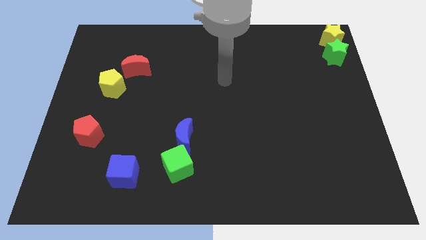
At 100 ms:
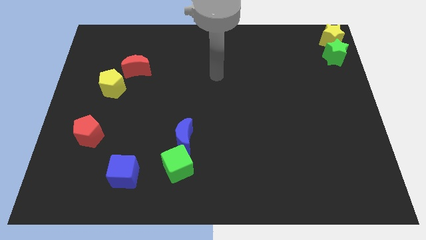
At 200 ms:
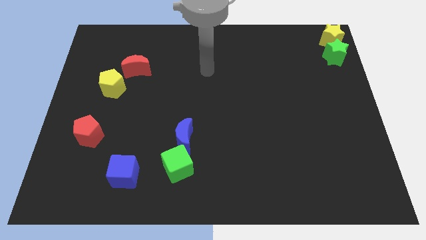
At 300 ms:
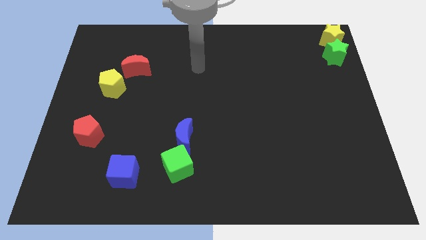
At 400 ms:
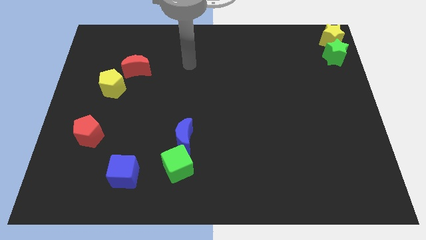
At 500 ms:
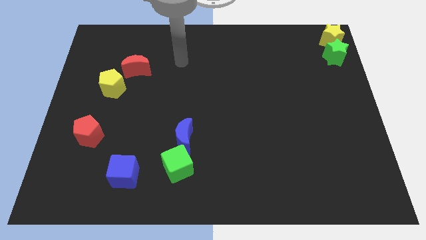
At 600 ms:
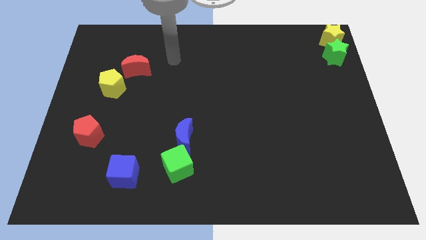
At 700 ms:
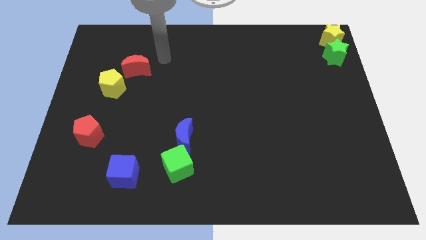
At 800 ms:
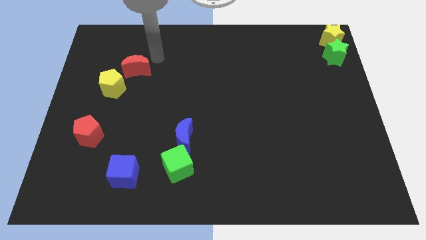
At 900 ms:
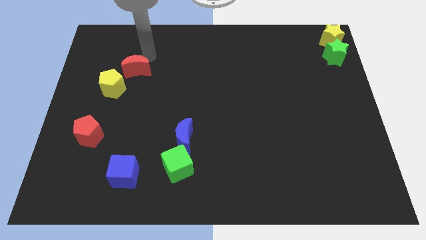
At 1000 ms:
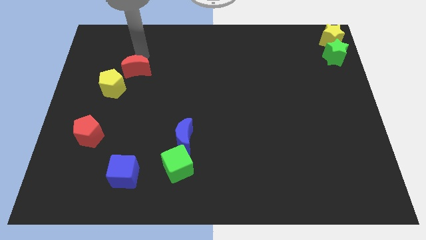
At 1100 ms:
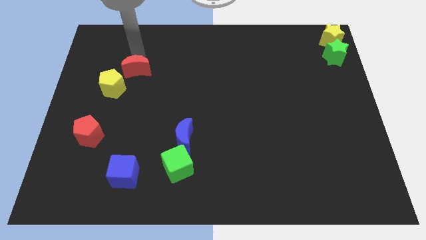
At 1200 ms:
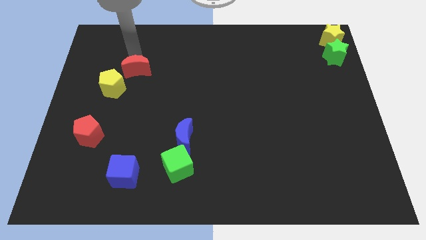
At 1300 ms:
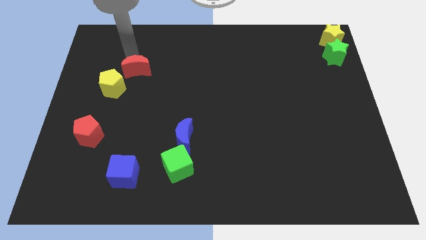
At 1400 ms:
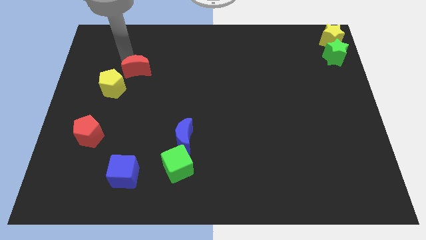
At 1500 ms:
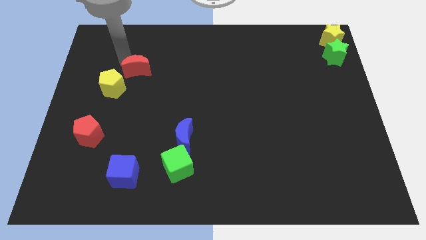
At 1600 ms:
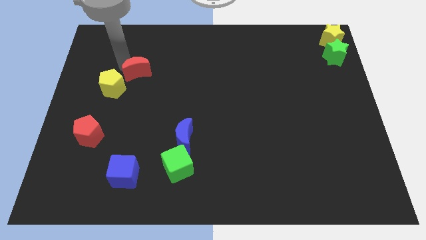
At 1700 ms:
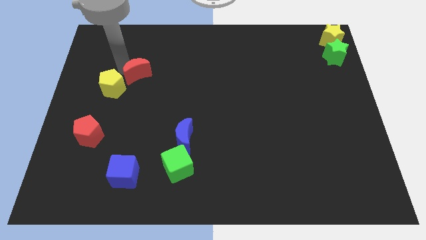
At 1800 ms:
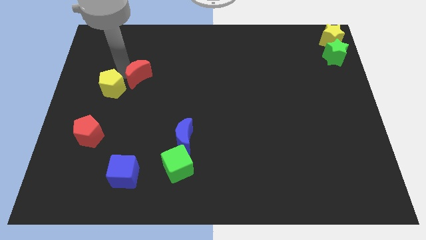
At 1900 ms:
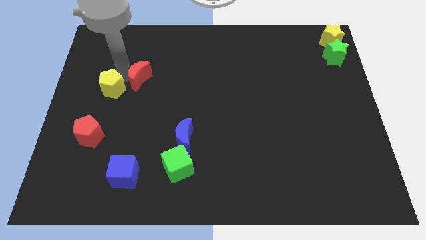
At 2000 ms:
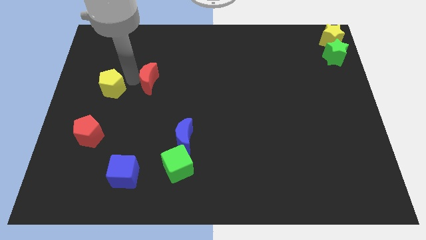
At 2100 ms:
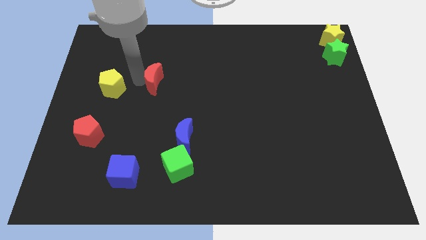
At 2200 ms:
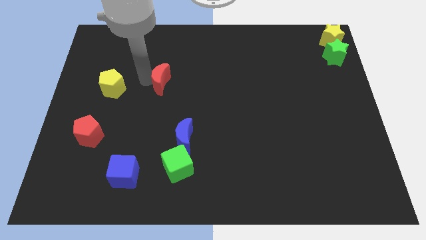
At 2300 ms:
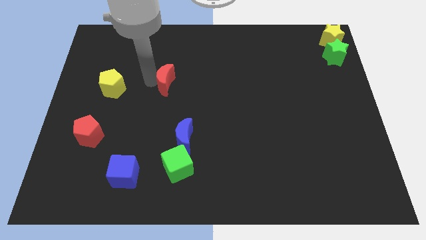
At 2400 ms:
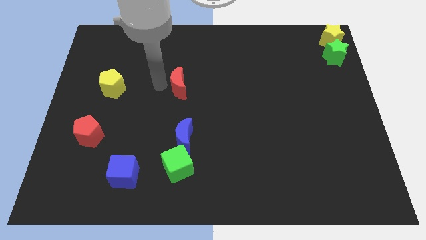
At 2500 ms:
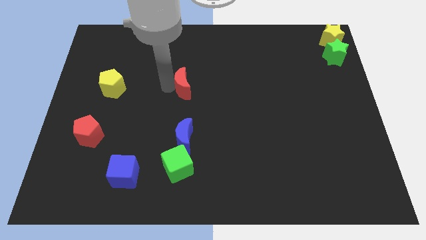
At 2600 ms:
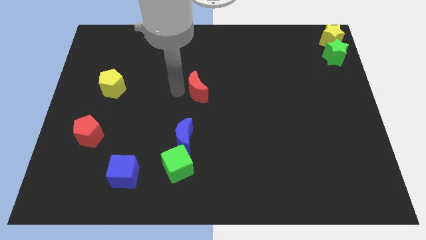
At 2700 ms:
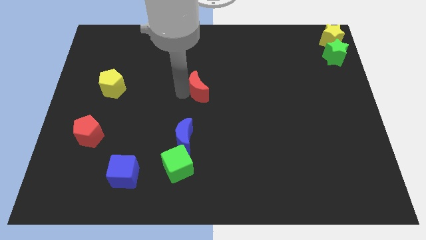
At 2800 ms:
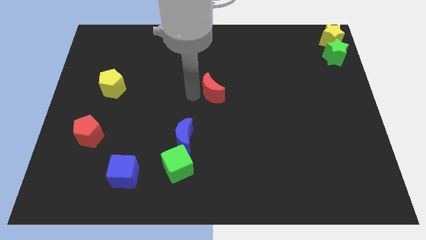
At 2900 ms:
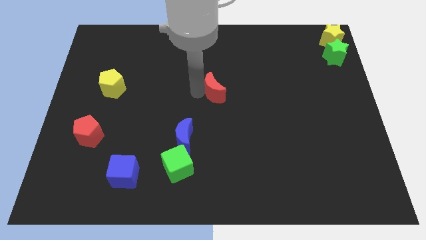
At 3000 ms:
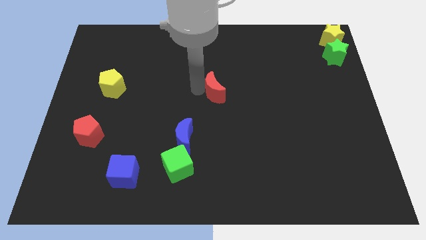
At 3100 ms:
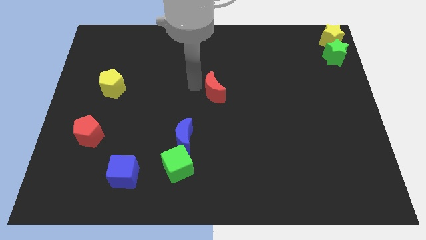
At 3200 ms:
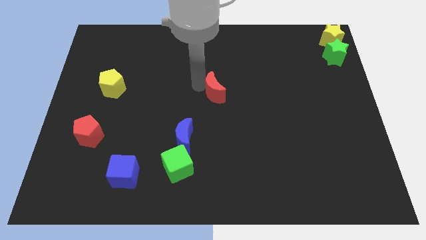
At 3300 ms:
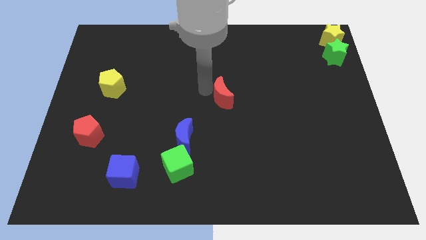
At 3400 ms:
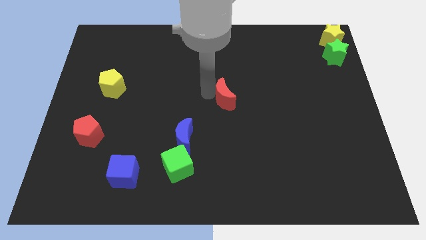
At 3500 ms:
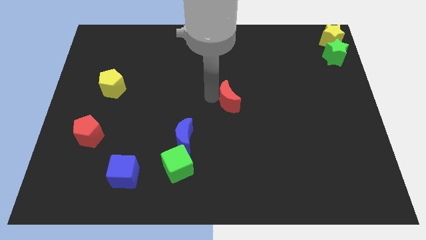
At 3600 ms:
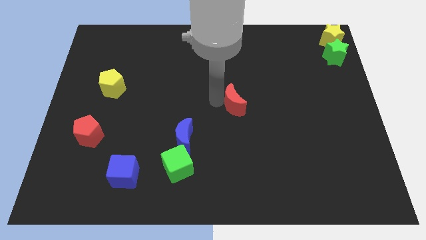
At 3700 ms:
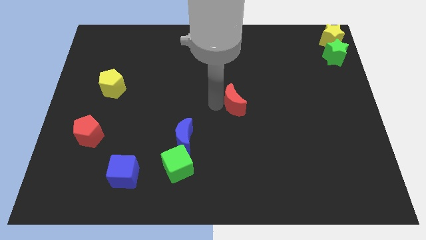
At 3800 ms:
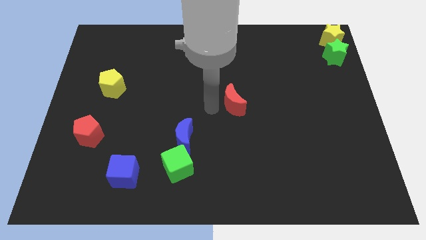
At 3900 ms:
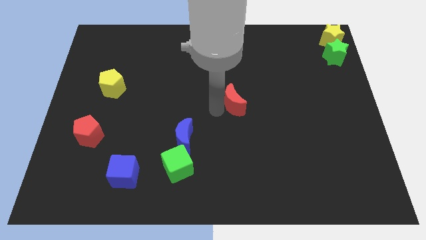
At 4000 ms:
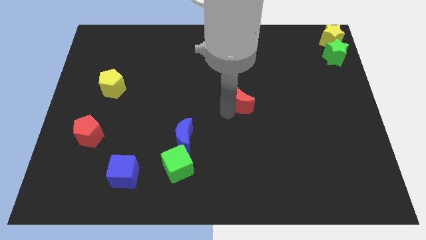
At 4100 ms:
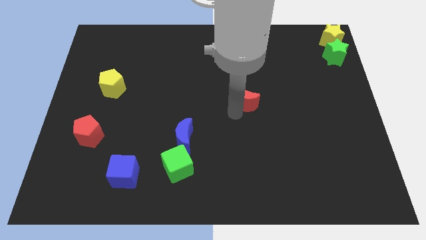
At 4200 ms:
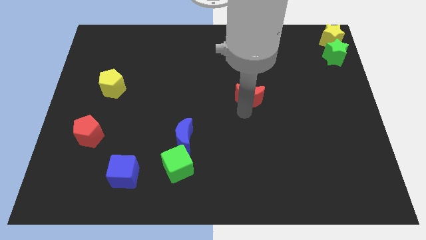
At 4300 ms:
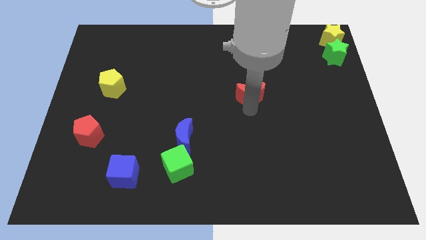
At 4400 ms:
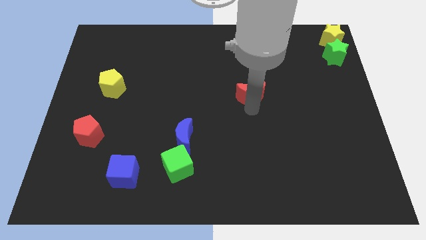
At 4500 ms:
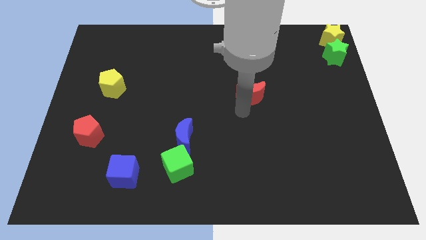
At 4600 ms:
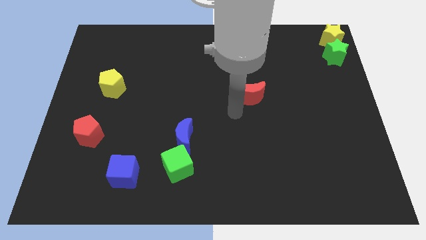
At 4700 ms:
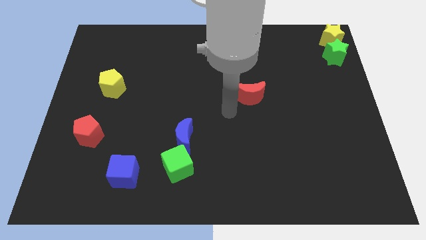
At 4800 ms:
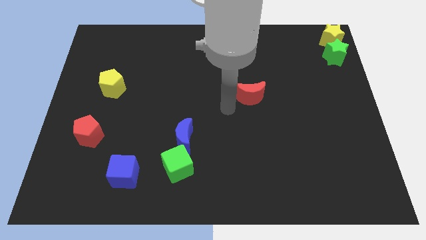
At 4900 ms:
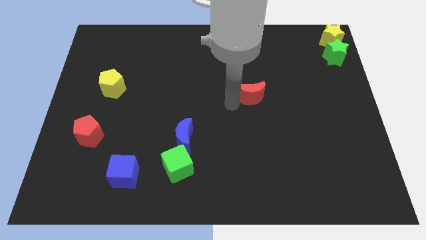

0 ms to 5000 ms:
separate the red crescent towards the center

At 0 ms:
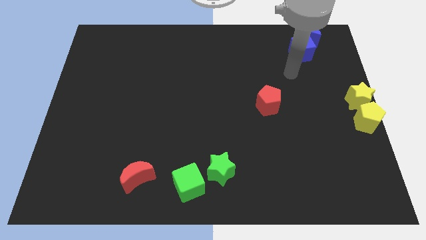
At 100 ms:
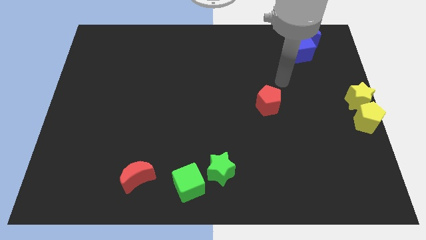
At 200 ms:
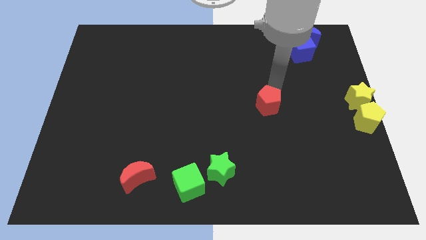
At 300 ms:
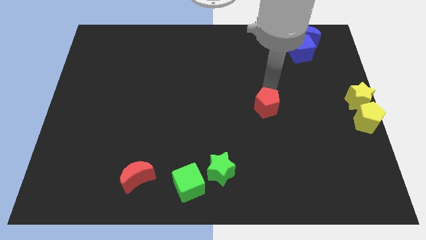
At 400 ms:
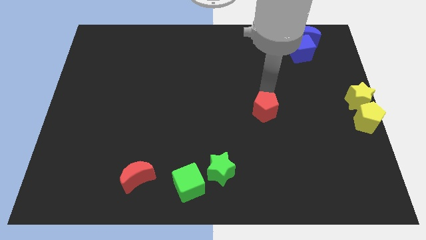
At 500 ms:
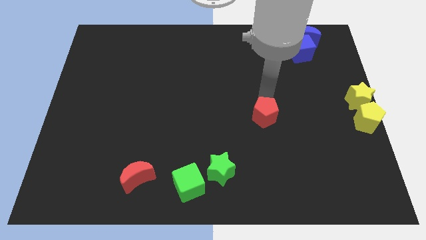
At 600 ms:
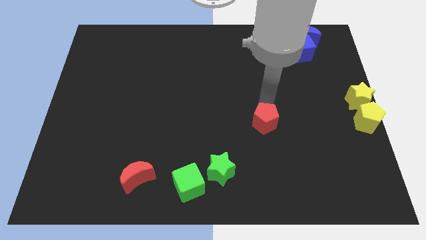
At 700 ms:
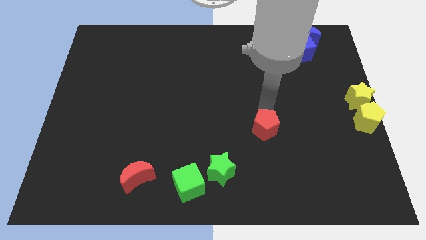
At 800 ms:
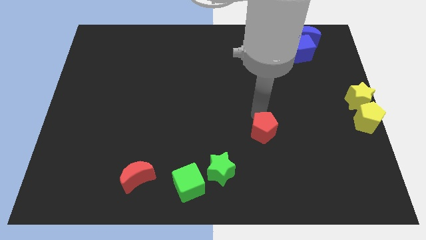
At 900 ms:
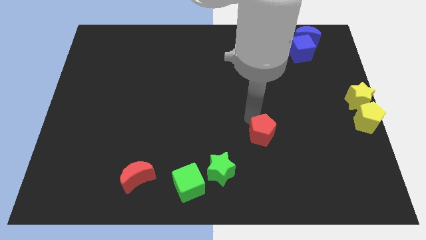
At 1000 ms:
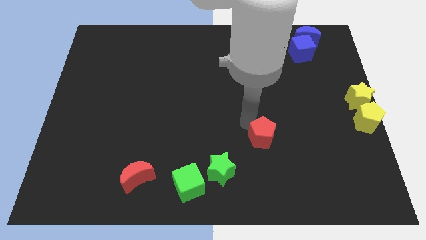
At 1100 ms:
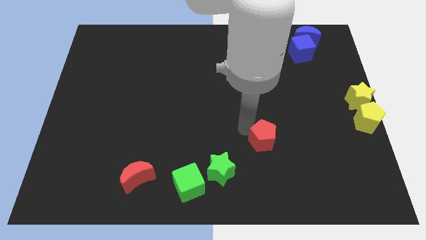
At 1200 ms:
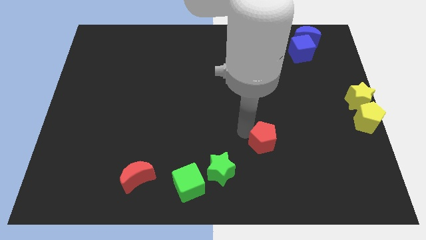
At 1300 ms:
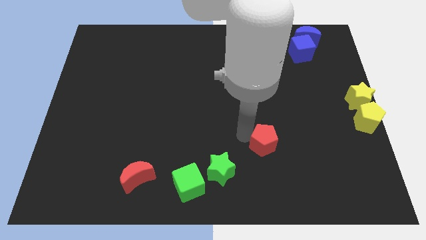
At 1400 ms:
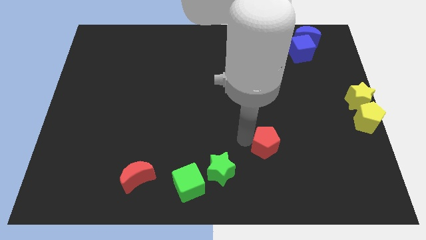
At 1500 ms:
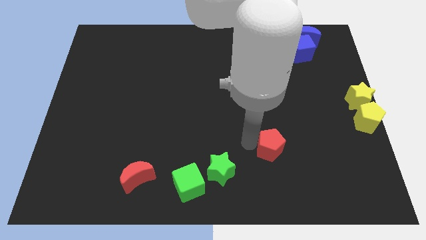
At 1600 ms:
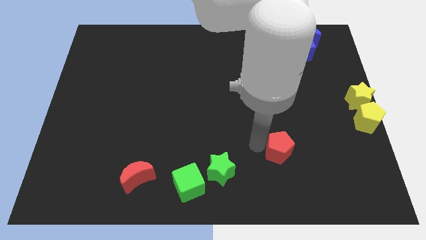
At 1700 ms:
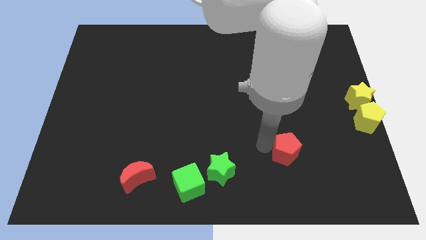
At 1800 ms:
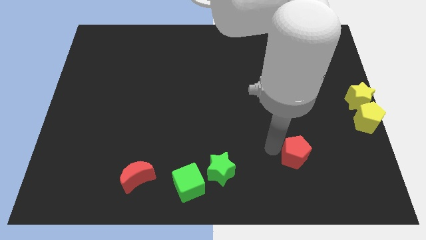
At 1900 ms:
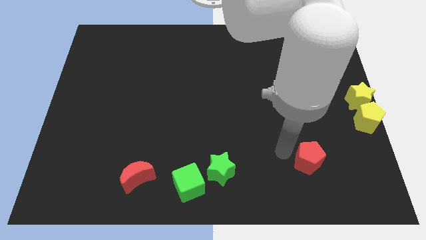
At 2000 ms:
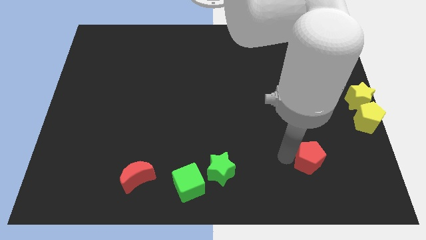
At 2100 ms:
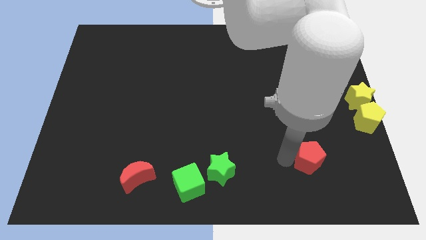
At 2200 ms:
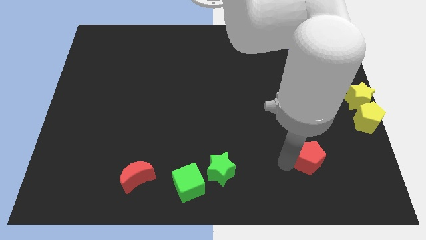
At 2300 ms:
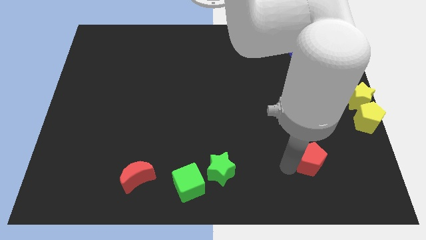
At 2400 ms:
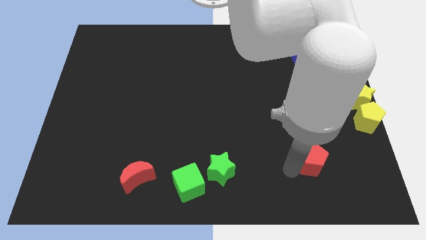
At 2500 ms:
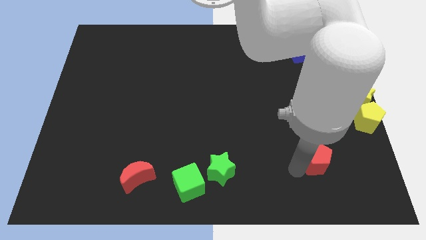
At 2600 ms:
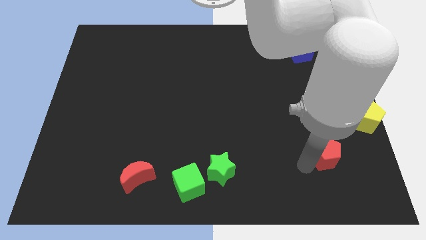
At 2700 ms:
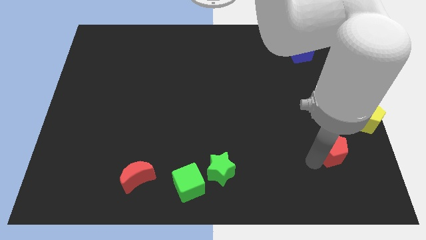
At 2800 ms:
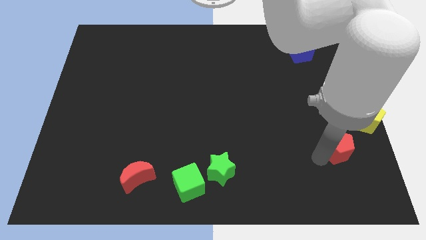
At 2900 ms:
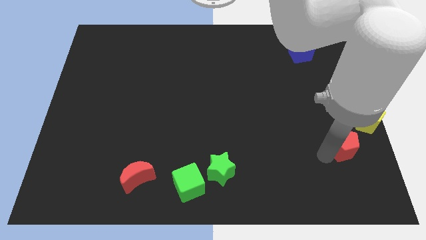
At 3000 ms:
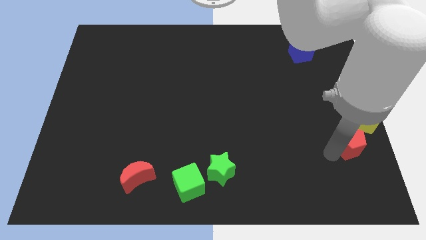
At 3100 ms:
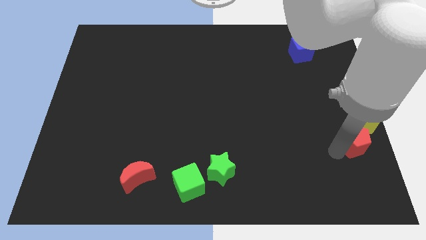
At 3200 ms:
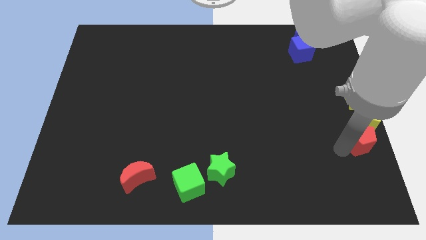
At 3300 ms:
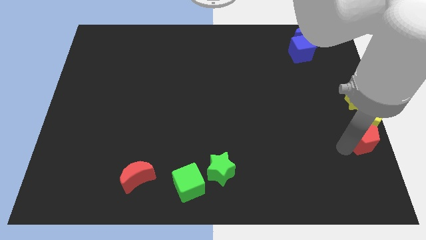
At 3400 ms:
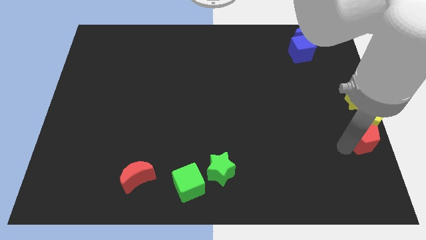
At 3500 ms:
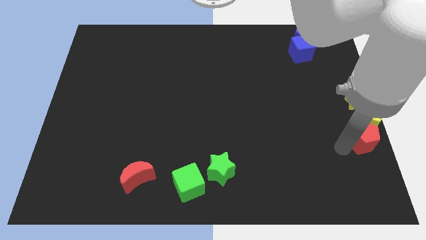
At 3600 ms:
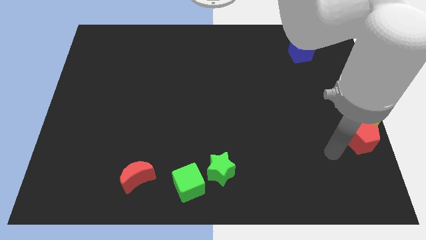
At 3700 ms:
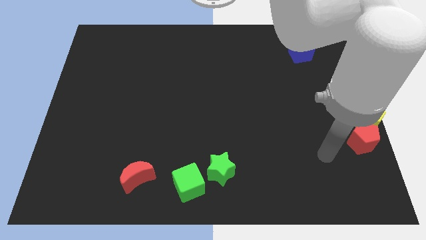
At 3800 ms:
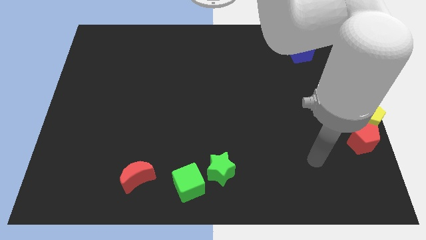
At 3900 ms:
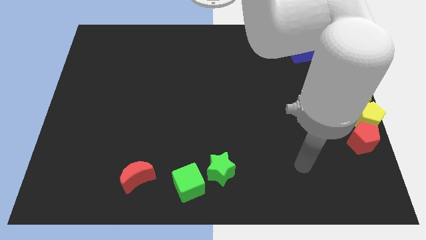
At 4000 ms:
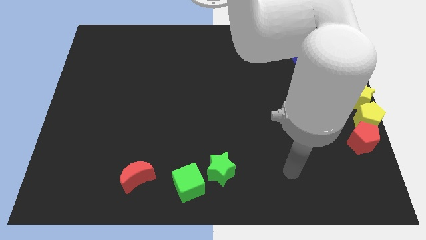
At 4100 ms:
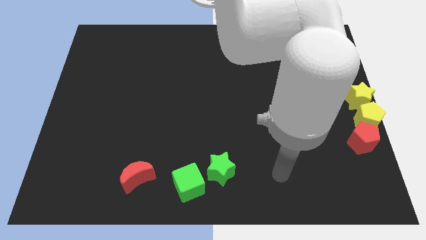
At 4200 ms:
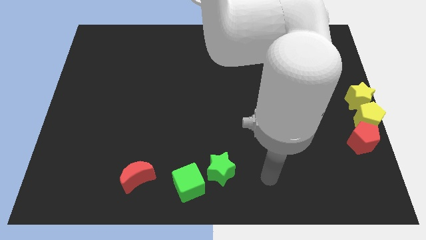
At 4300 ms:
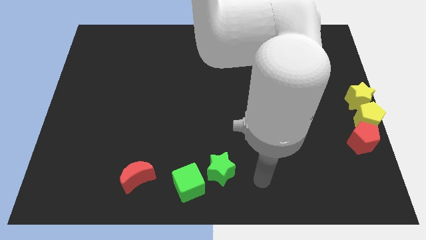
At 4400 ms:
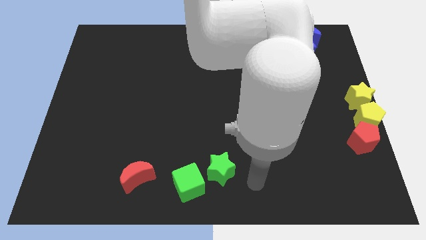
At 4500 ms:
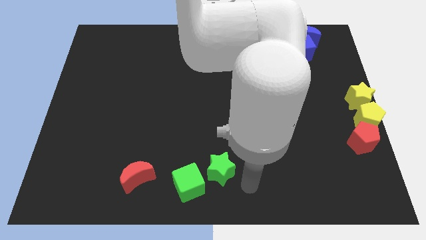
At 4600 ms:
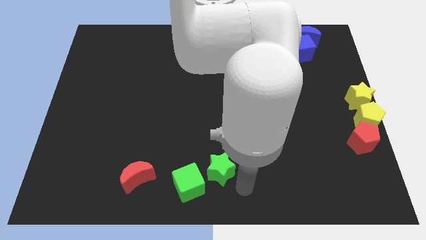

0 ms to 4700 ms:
make red pentagon to touch the bottom side of the yellow pentagon
